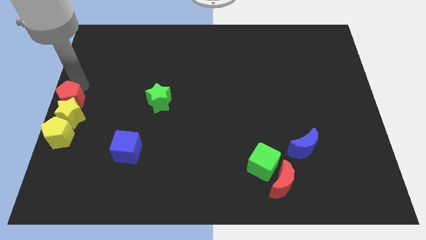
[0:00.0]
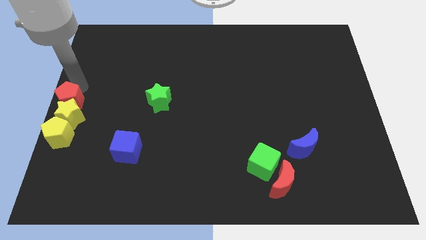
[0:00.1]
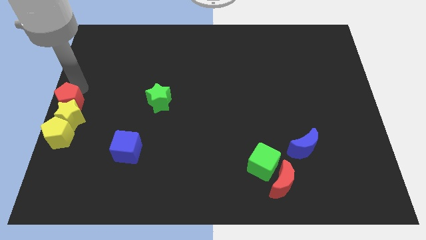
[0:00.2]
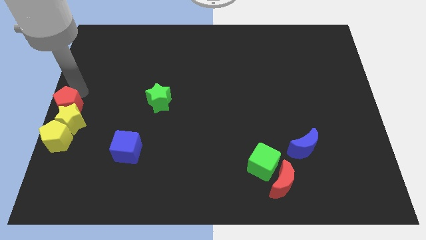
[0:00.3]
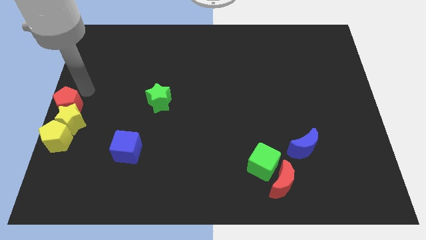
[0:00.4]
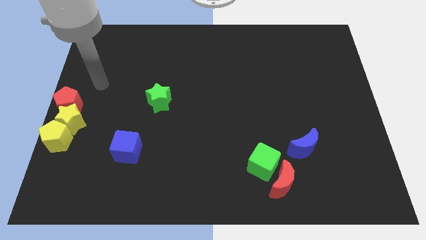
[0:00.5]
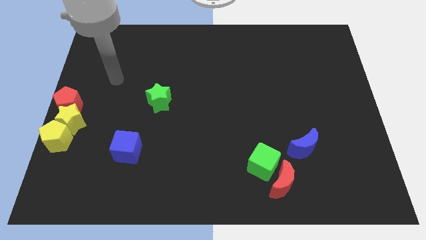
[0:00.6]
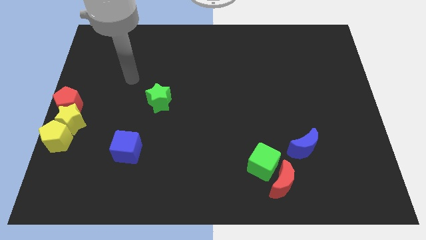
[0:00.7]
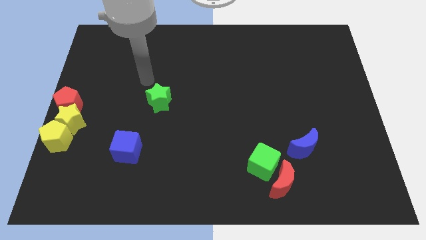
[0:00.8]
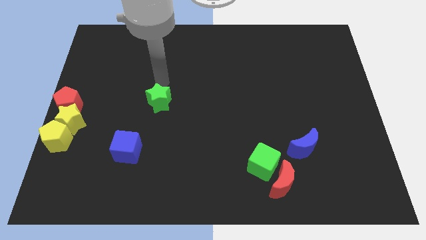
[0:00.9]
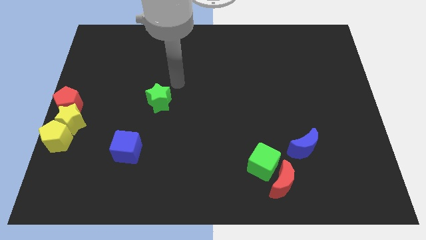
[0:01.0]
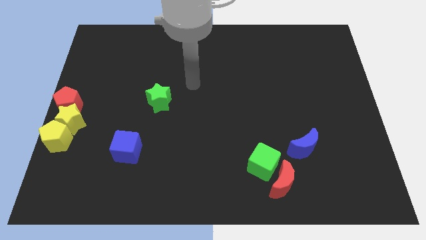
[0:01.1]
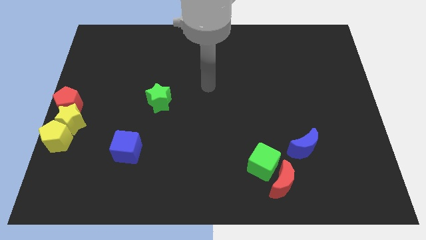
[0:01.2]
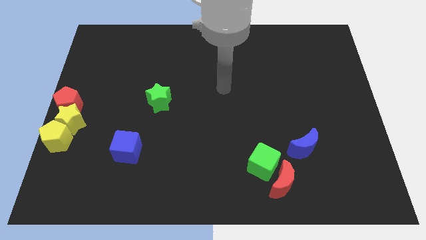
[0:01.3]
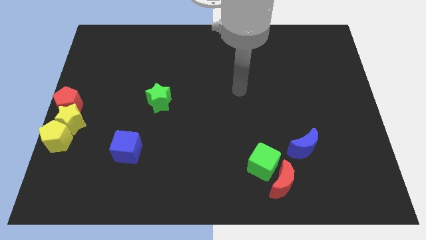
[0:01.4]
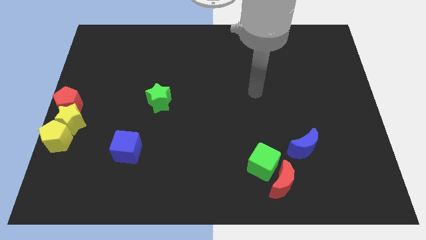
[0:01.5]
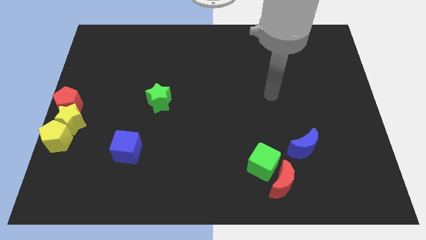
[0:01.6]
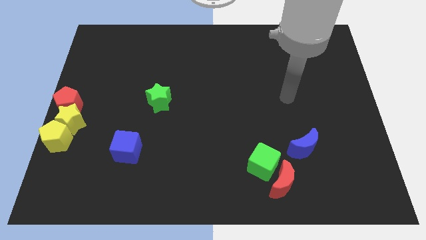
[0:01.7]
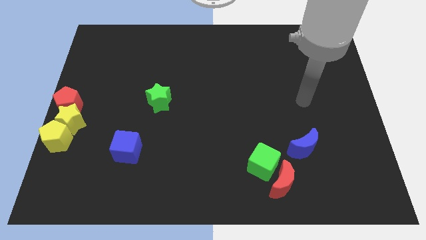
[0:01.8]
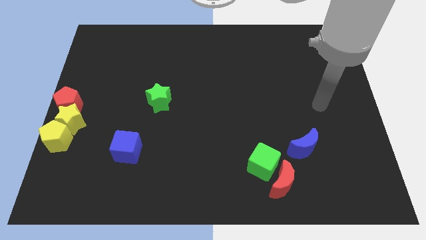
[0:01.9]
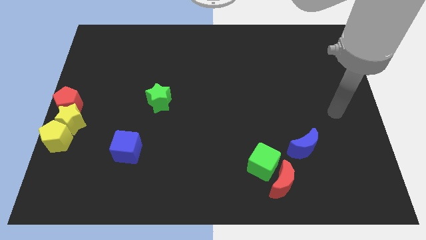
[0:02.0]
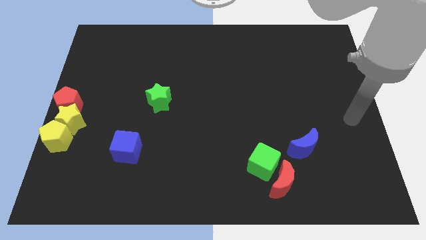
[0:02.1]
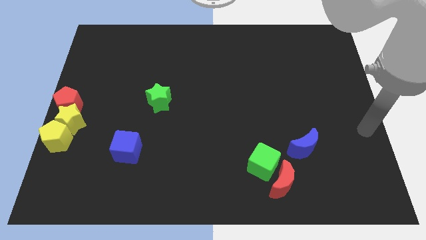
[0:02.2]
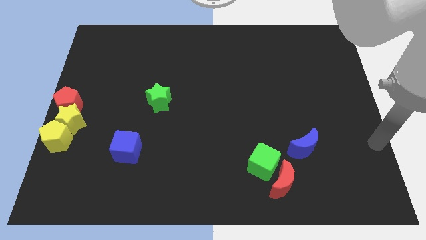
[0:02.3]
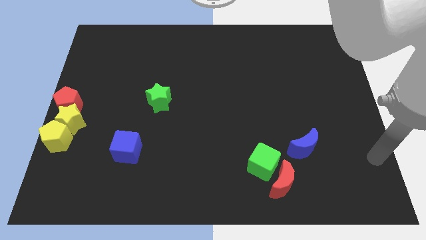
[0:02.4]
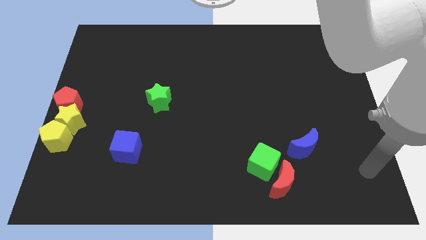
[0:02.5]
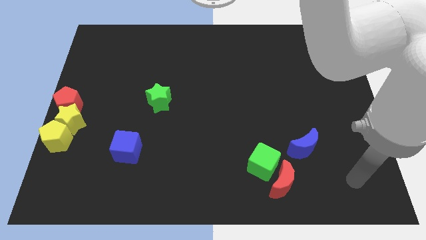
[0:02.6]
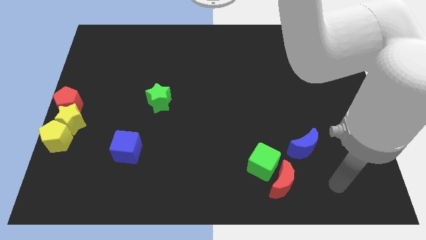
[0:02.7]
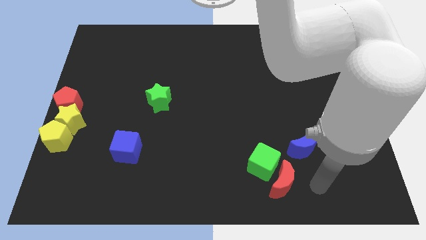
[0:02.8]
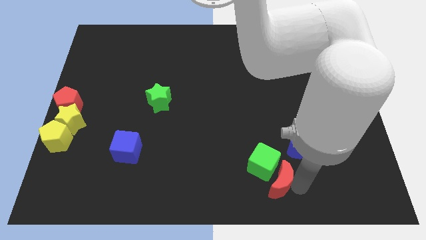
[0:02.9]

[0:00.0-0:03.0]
point the arm to the right of the red moon

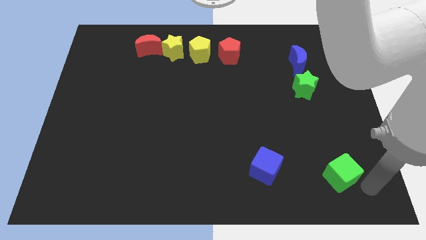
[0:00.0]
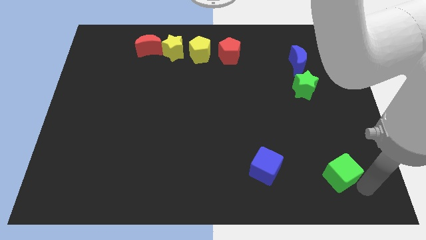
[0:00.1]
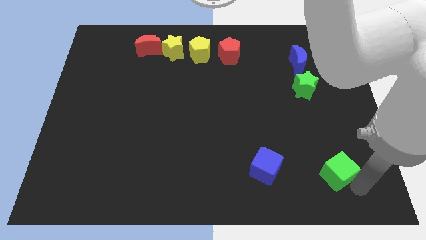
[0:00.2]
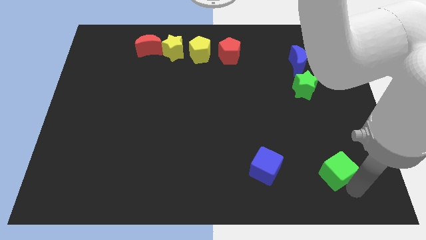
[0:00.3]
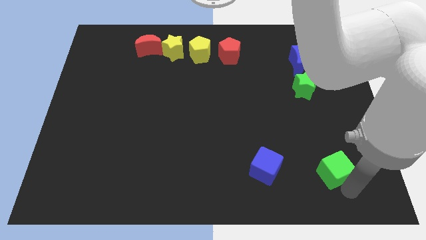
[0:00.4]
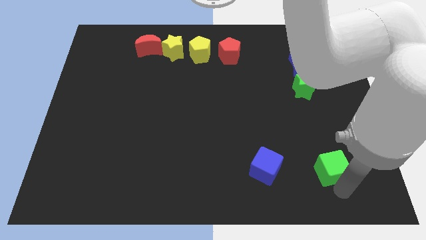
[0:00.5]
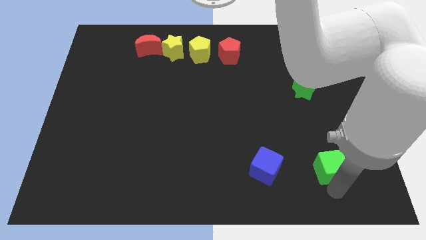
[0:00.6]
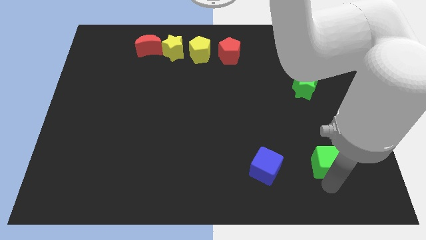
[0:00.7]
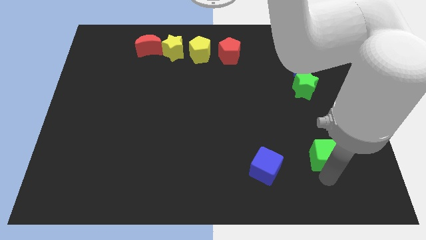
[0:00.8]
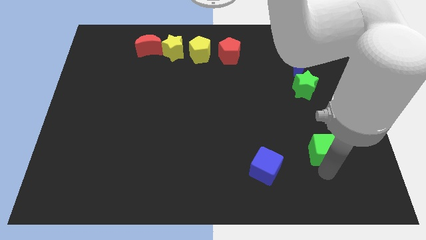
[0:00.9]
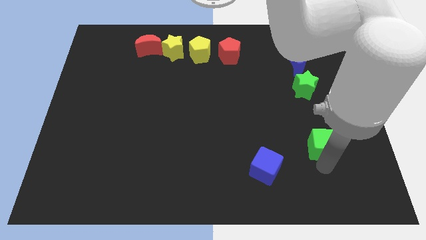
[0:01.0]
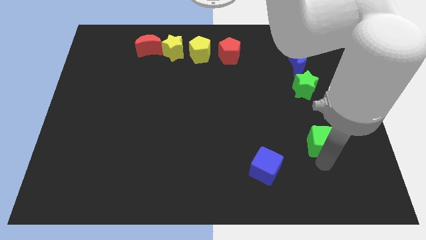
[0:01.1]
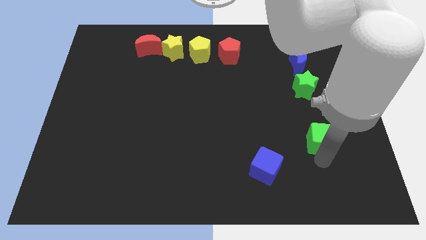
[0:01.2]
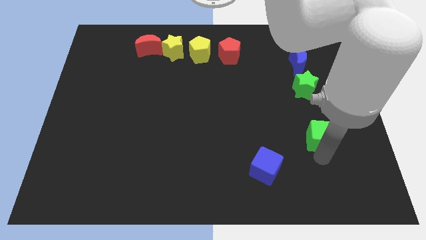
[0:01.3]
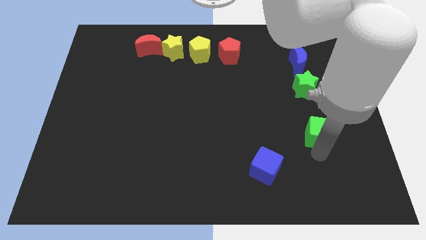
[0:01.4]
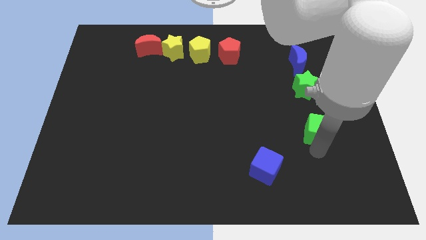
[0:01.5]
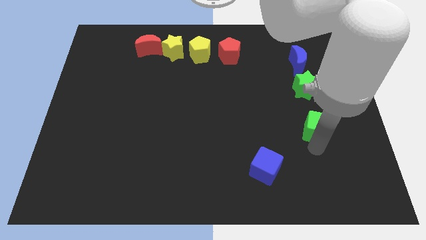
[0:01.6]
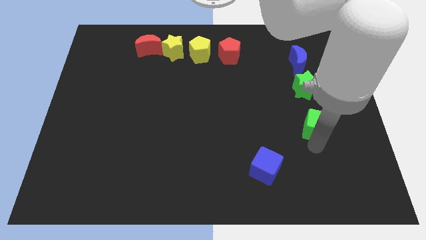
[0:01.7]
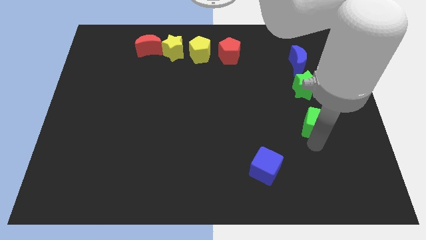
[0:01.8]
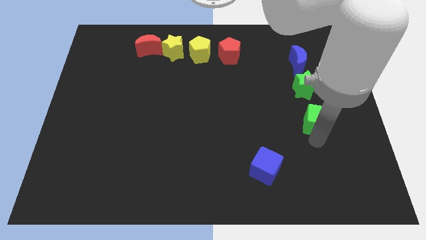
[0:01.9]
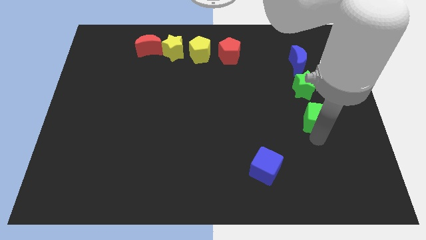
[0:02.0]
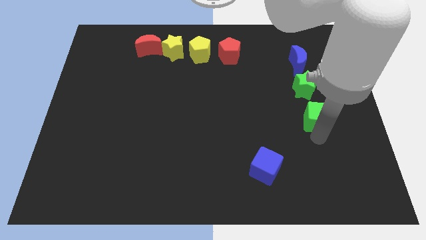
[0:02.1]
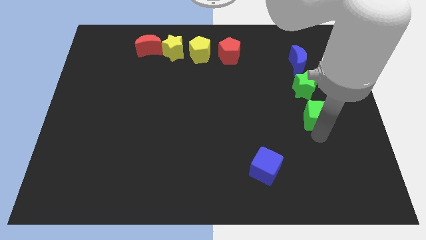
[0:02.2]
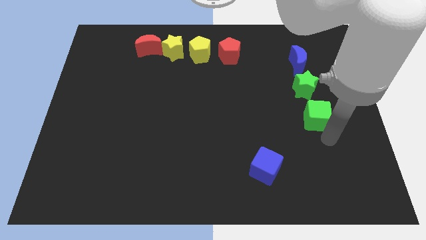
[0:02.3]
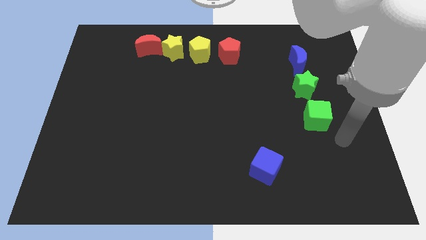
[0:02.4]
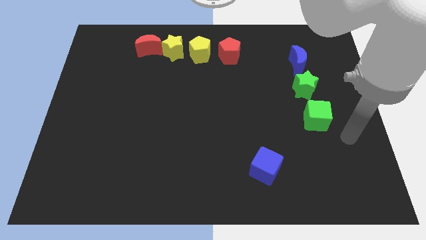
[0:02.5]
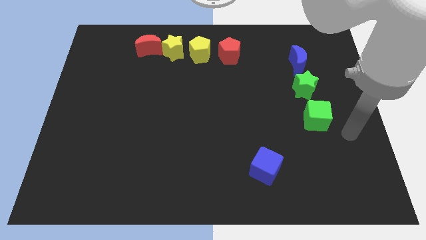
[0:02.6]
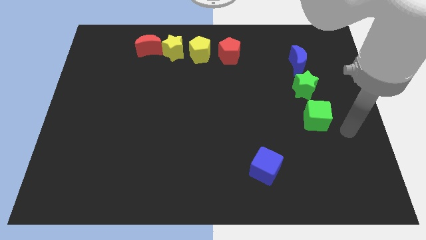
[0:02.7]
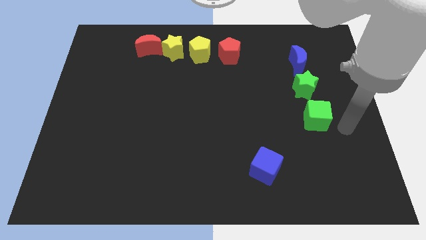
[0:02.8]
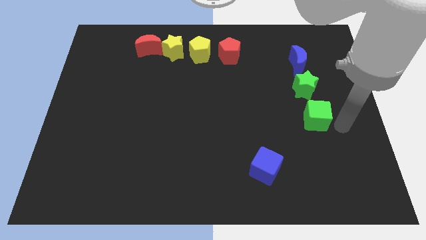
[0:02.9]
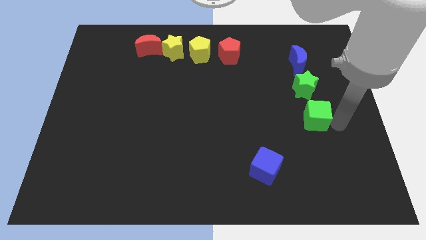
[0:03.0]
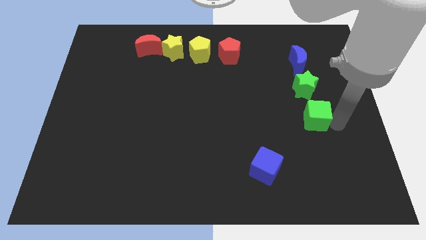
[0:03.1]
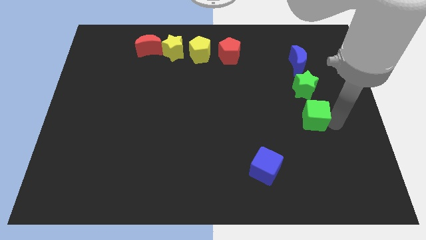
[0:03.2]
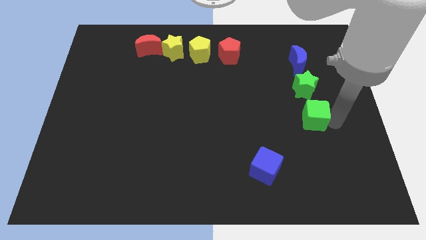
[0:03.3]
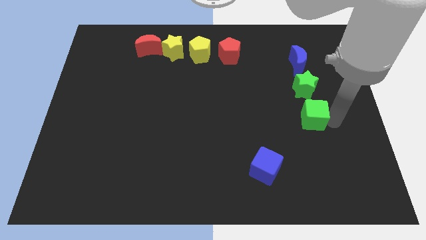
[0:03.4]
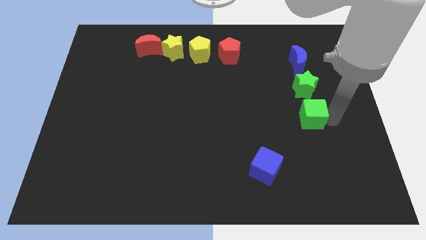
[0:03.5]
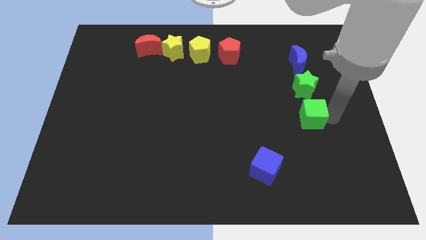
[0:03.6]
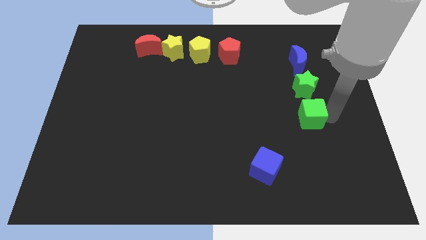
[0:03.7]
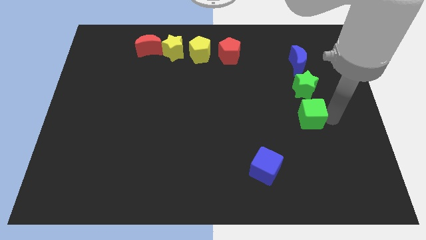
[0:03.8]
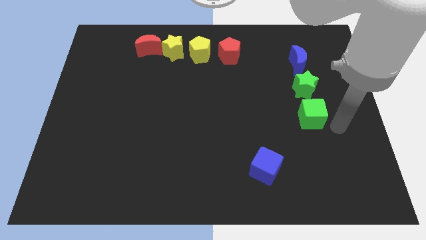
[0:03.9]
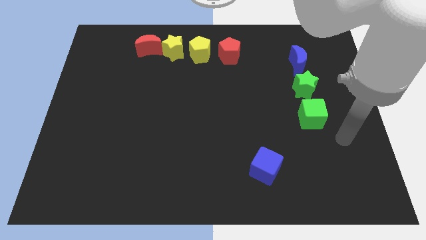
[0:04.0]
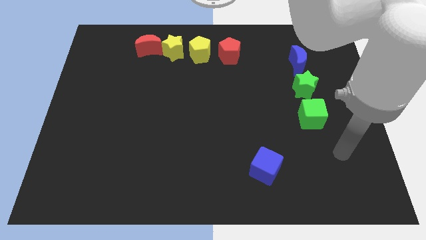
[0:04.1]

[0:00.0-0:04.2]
move the green cube below the green star

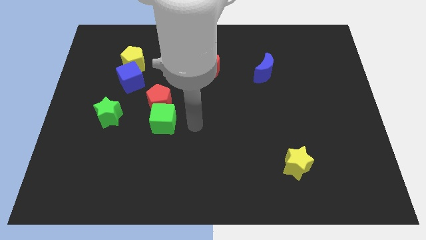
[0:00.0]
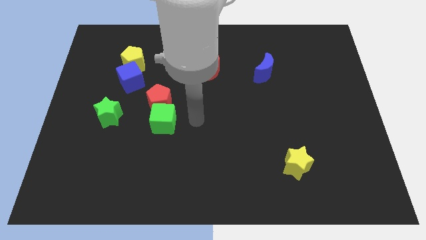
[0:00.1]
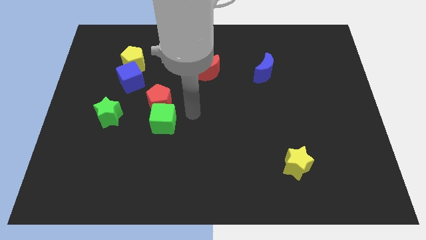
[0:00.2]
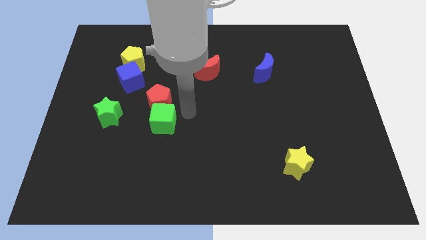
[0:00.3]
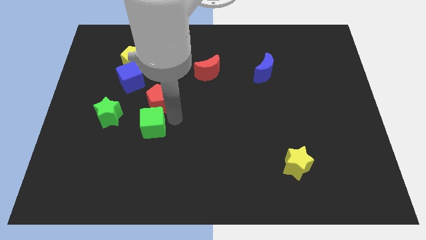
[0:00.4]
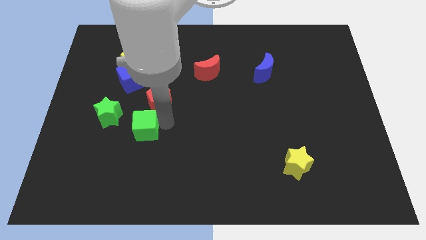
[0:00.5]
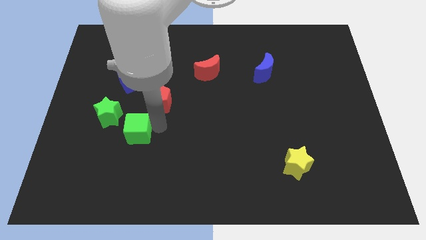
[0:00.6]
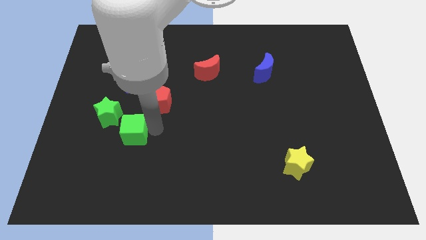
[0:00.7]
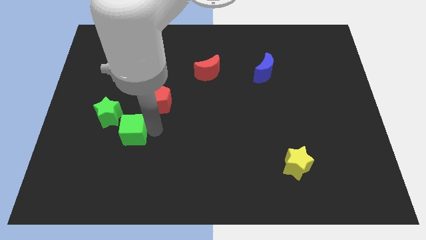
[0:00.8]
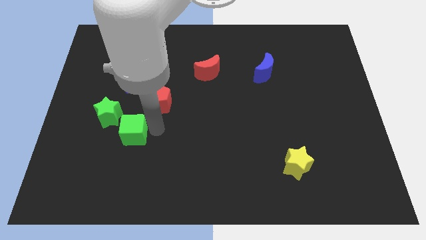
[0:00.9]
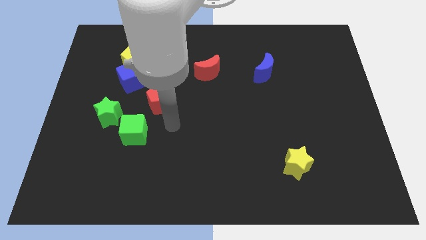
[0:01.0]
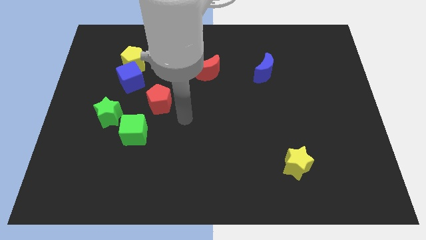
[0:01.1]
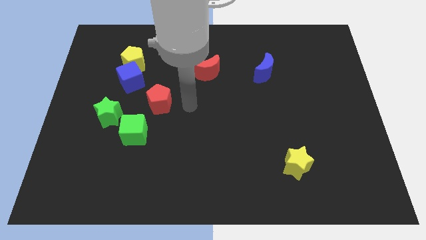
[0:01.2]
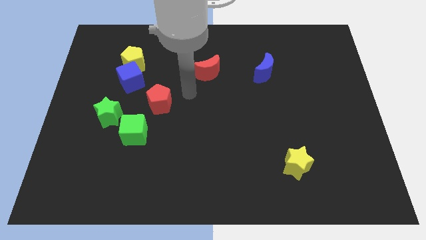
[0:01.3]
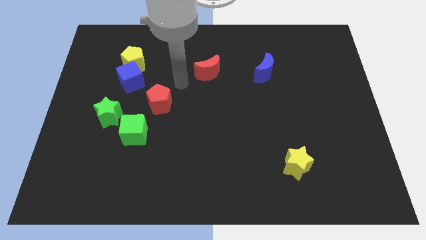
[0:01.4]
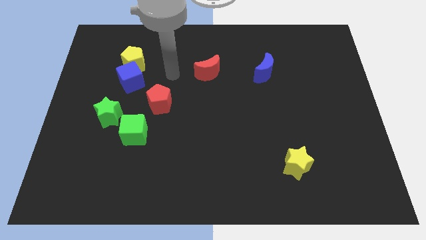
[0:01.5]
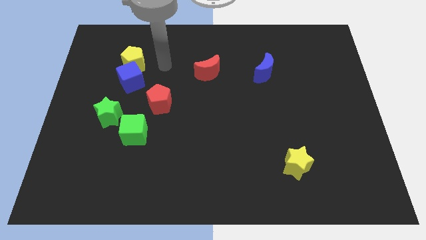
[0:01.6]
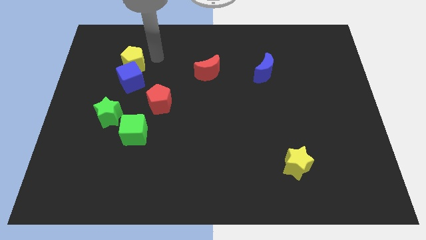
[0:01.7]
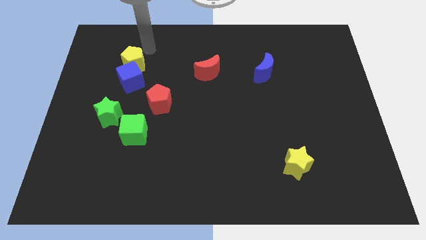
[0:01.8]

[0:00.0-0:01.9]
move green cube towards green star
